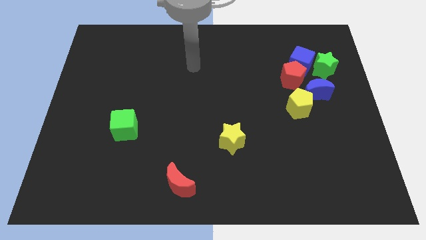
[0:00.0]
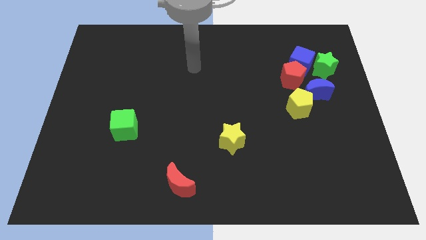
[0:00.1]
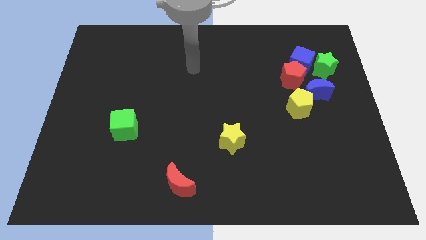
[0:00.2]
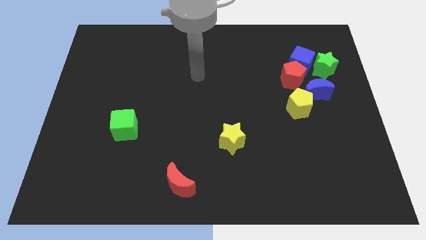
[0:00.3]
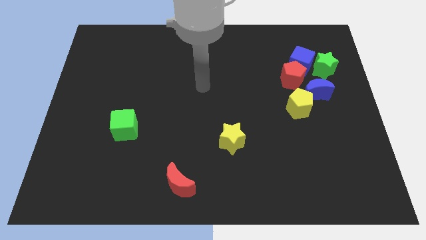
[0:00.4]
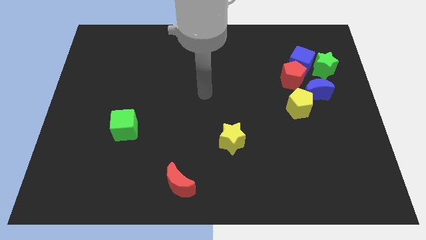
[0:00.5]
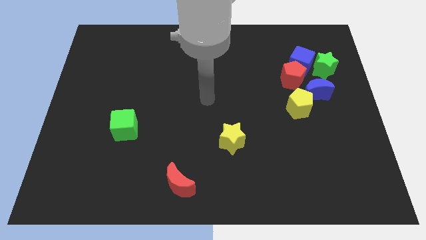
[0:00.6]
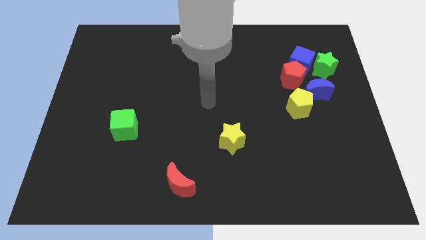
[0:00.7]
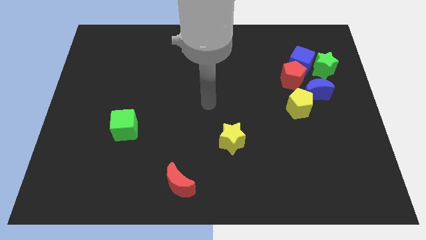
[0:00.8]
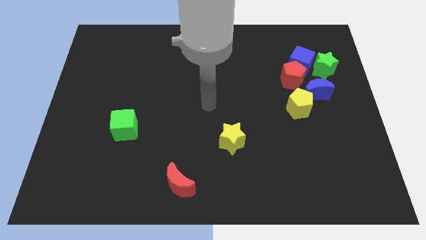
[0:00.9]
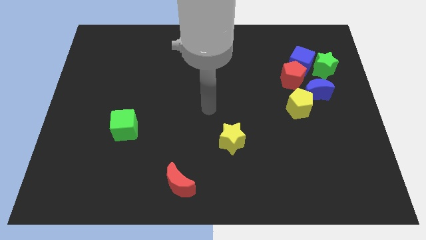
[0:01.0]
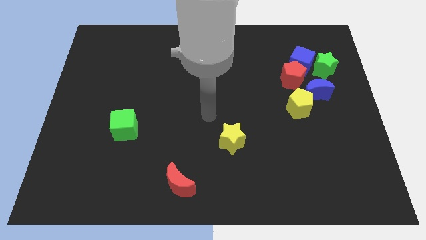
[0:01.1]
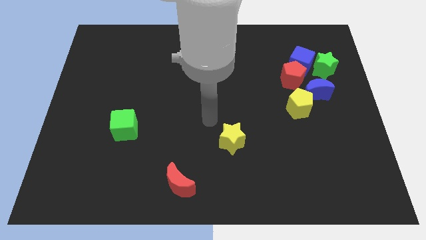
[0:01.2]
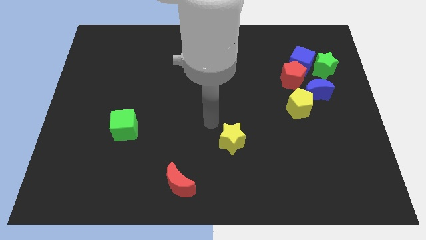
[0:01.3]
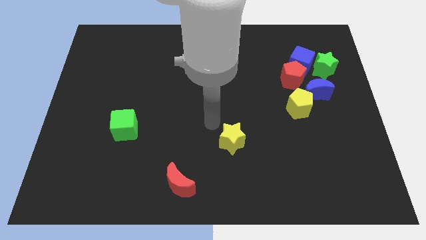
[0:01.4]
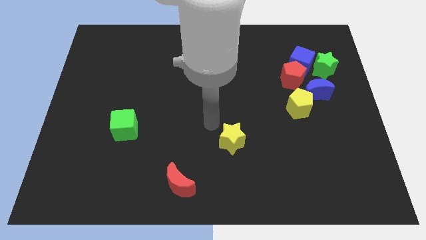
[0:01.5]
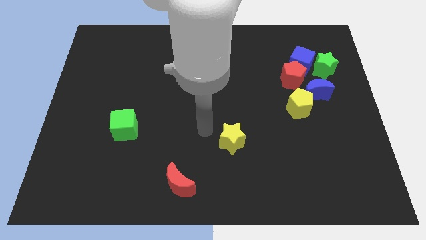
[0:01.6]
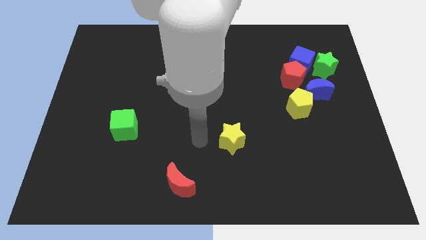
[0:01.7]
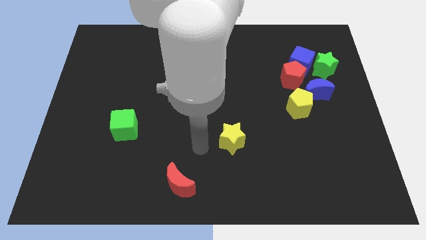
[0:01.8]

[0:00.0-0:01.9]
point your arm to the left side of yellow star

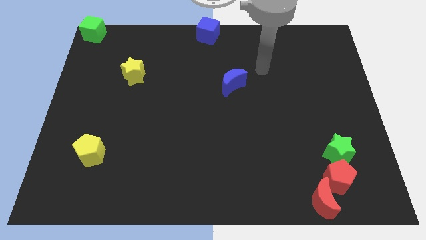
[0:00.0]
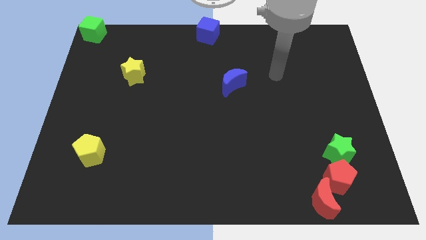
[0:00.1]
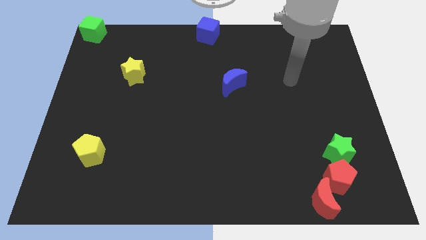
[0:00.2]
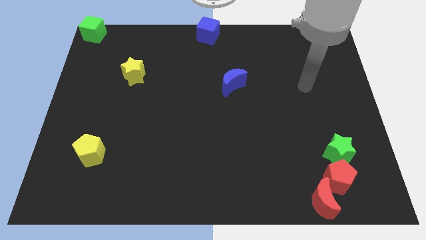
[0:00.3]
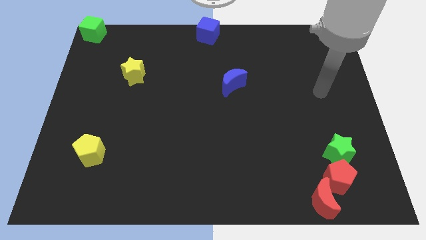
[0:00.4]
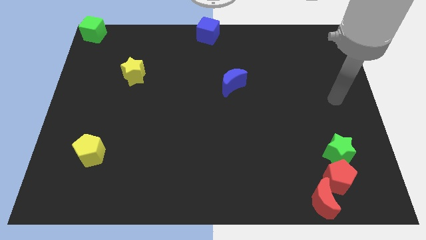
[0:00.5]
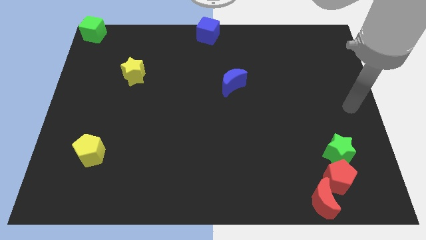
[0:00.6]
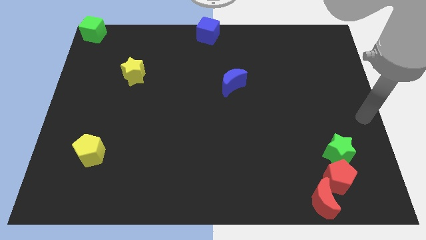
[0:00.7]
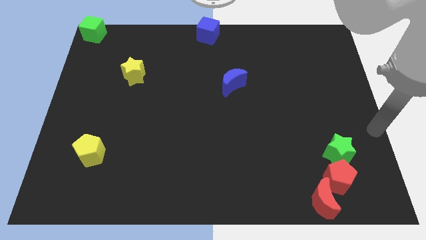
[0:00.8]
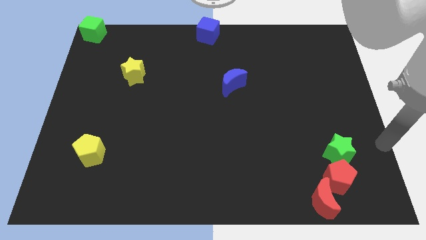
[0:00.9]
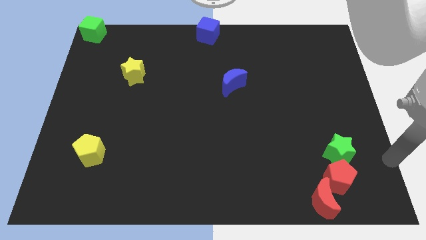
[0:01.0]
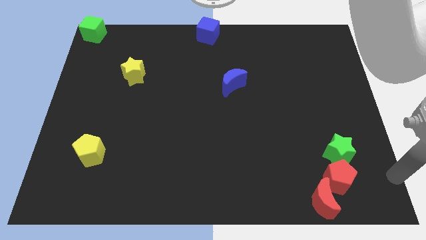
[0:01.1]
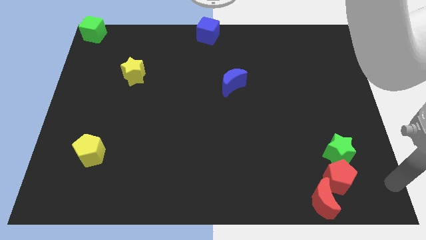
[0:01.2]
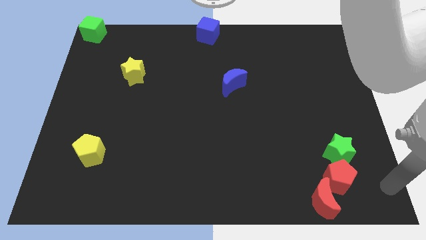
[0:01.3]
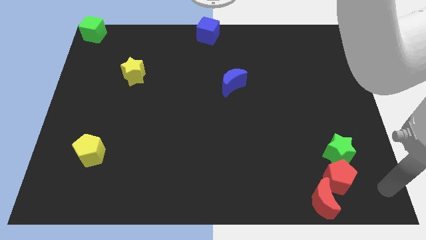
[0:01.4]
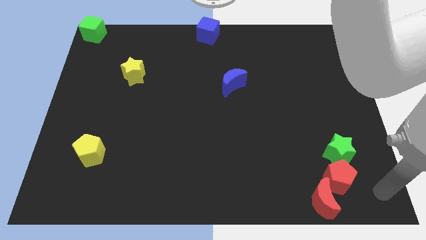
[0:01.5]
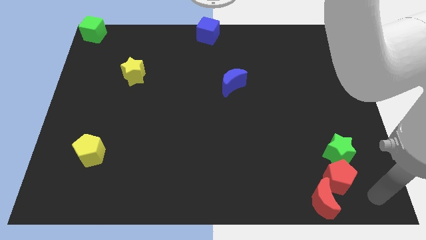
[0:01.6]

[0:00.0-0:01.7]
go to the right side of the red blocks

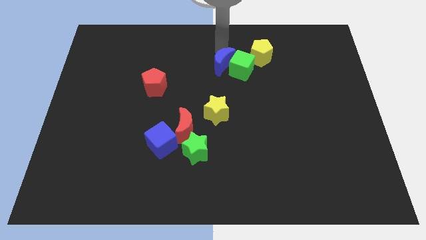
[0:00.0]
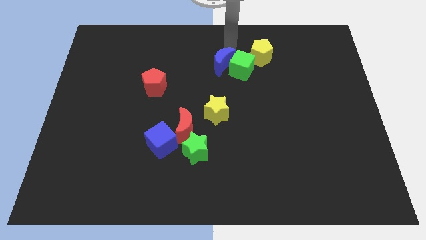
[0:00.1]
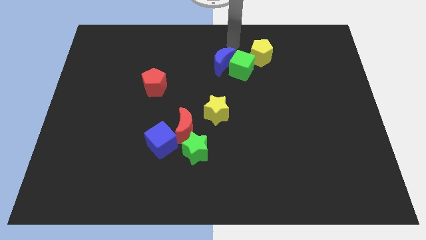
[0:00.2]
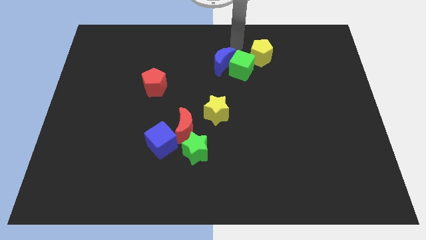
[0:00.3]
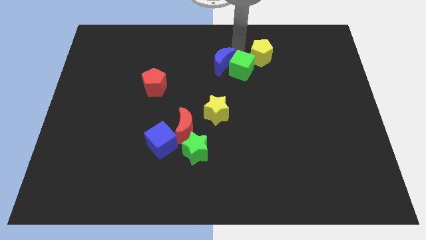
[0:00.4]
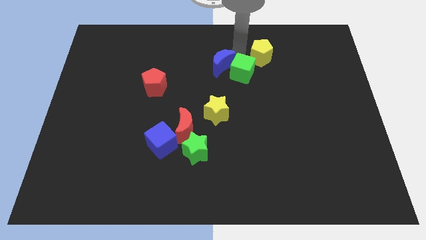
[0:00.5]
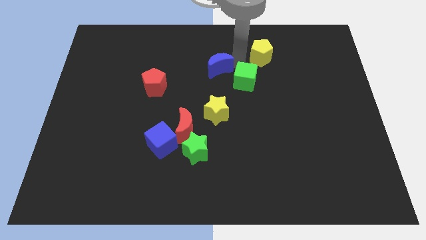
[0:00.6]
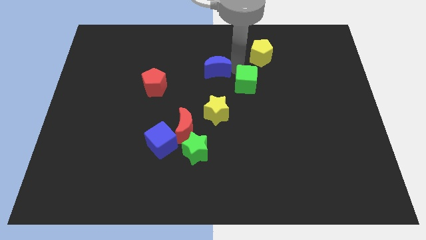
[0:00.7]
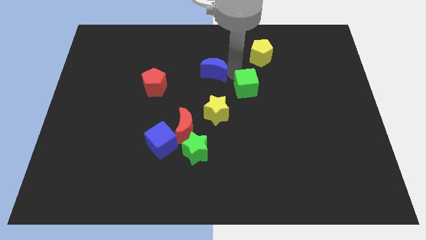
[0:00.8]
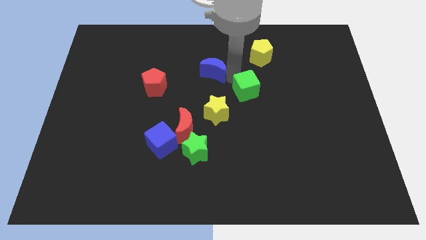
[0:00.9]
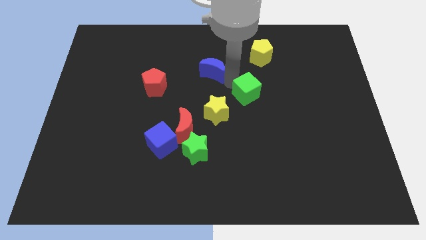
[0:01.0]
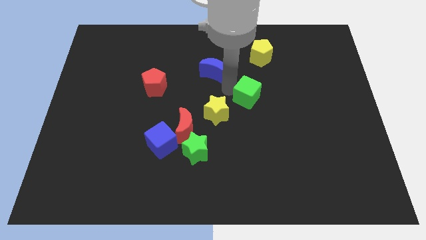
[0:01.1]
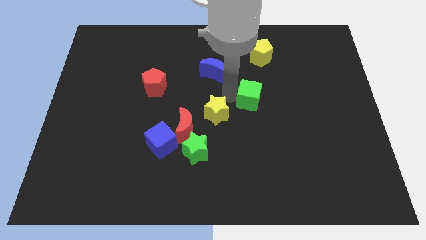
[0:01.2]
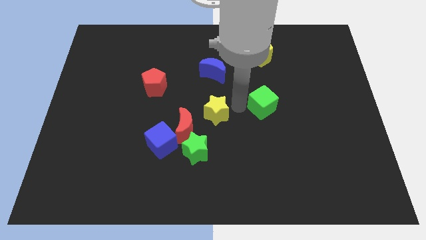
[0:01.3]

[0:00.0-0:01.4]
separate the green cube from blue crescent

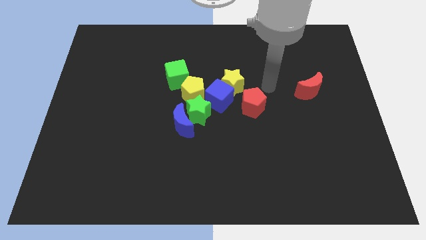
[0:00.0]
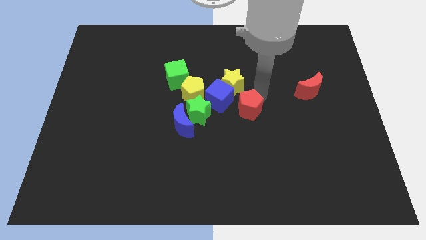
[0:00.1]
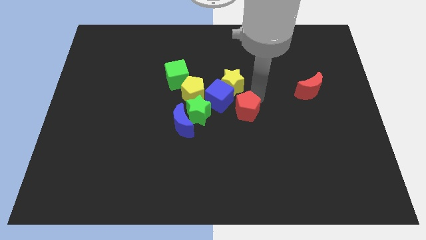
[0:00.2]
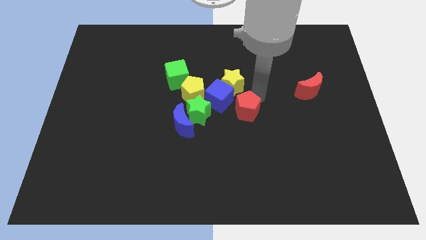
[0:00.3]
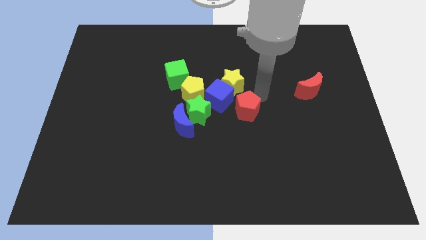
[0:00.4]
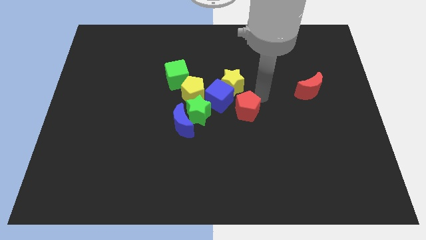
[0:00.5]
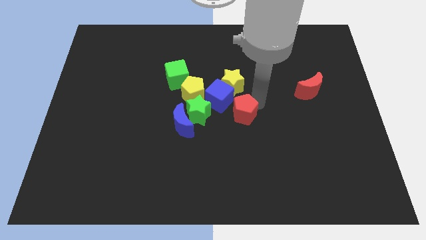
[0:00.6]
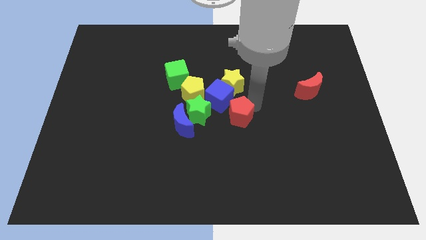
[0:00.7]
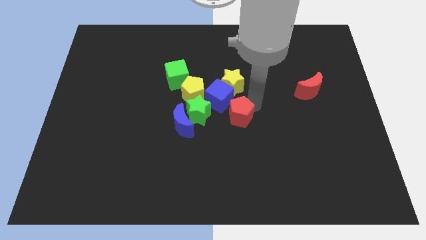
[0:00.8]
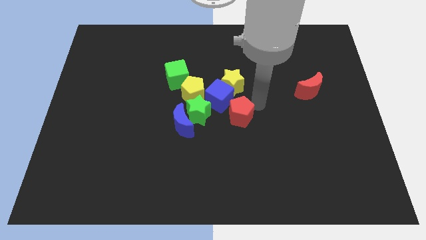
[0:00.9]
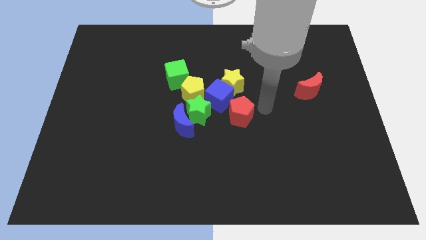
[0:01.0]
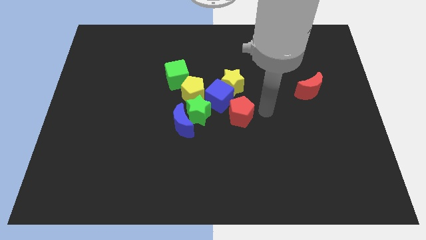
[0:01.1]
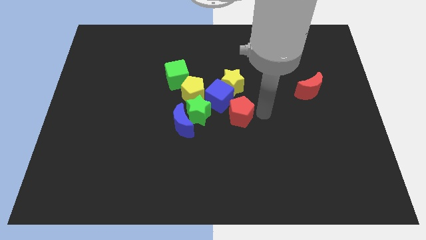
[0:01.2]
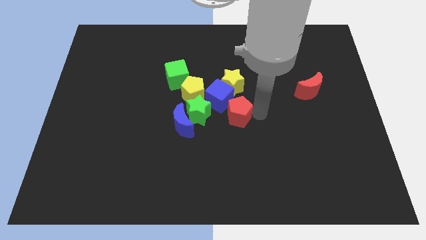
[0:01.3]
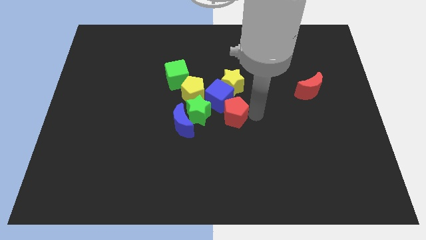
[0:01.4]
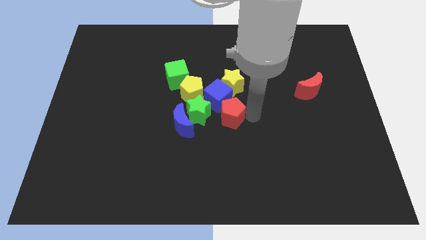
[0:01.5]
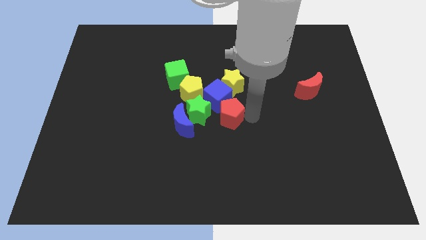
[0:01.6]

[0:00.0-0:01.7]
place the red pentagon into the blue cube

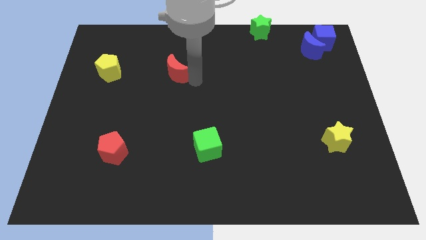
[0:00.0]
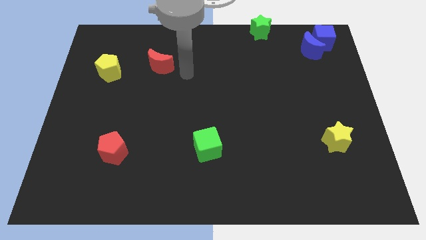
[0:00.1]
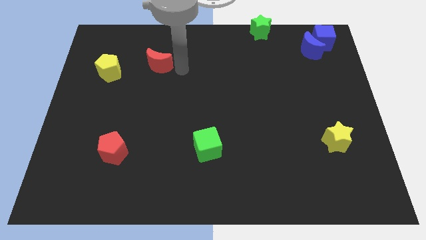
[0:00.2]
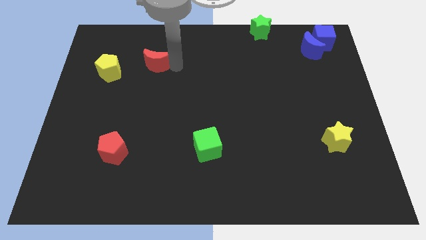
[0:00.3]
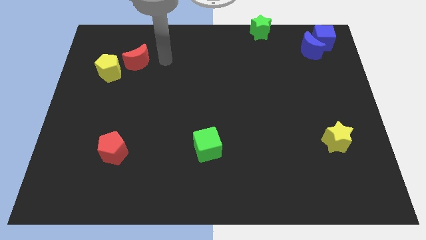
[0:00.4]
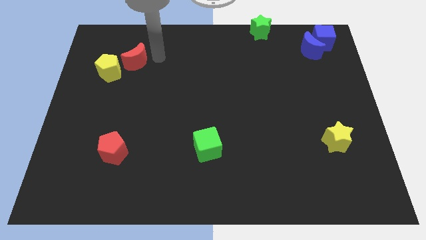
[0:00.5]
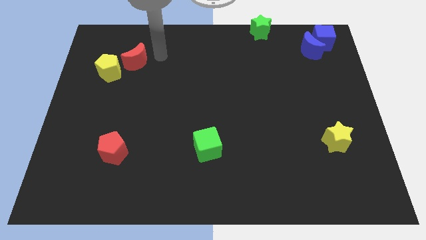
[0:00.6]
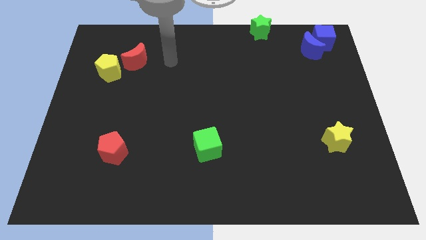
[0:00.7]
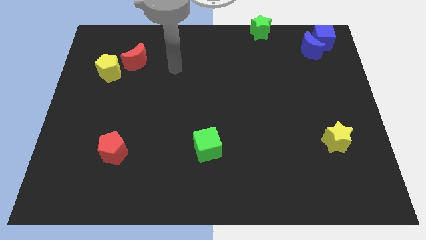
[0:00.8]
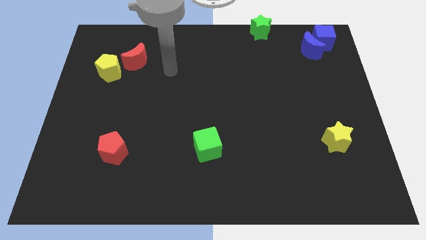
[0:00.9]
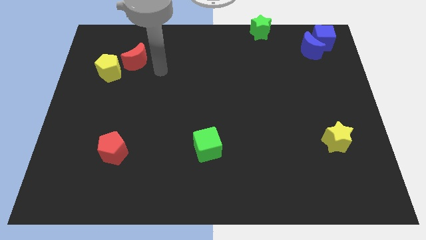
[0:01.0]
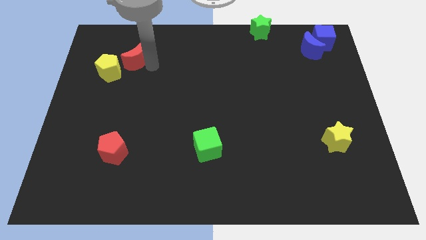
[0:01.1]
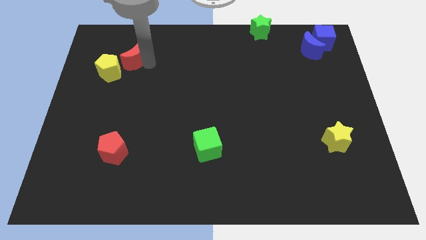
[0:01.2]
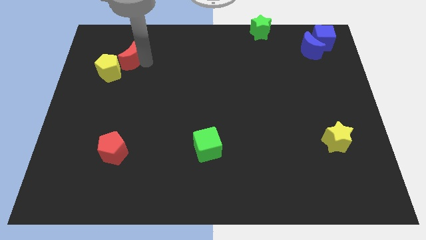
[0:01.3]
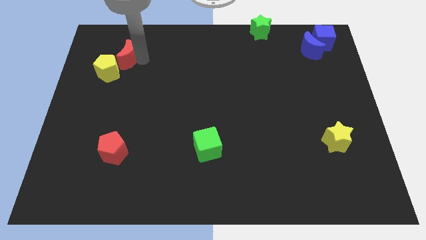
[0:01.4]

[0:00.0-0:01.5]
push the red crescent into the yellow pentagon

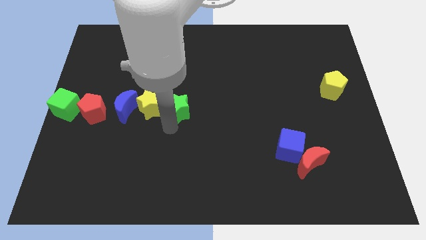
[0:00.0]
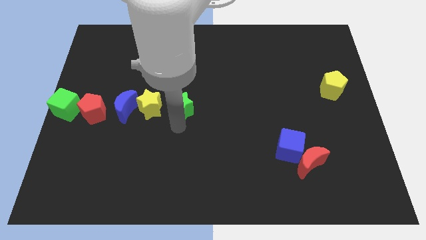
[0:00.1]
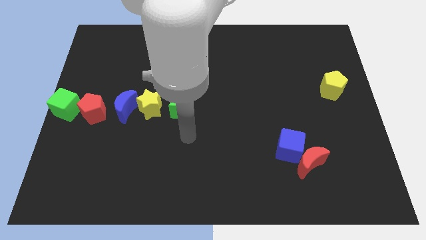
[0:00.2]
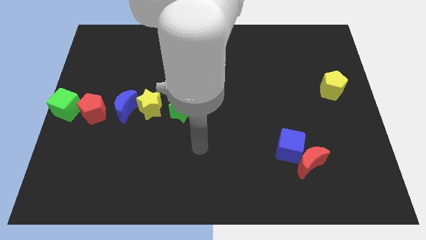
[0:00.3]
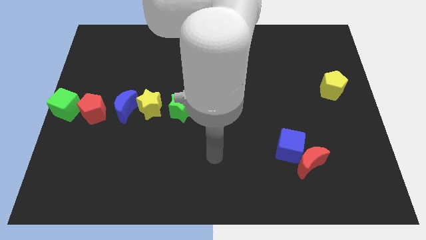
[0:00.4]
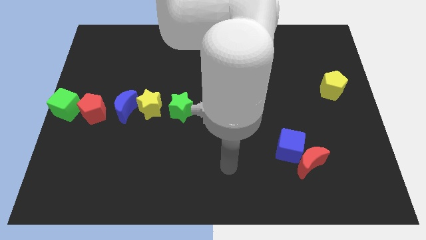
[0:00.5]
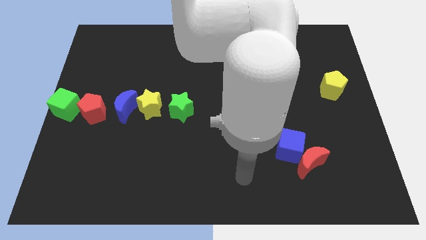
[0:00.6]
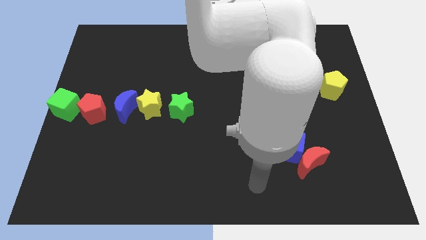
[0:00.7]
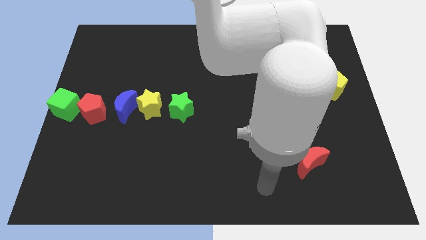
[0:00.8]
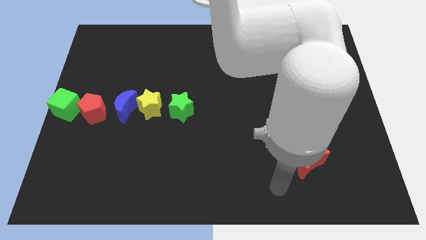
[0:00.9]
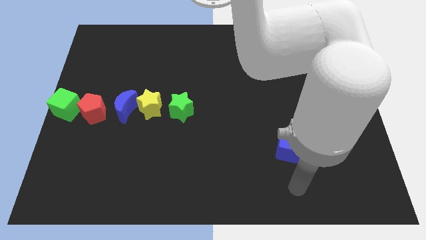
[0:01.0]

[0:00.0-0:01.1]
move the arm away from the green star
